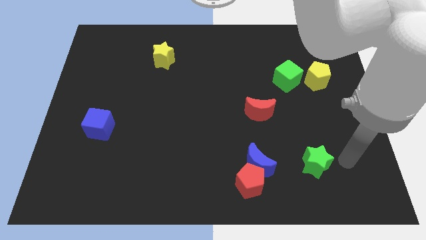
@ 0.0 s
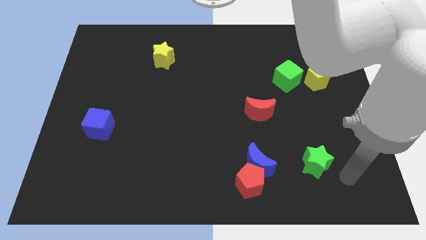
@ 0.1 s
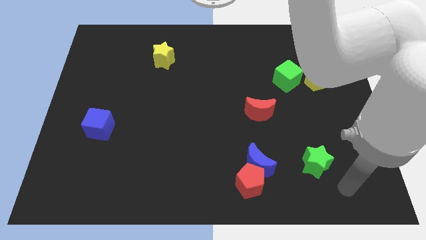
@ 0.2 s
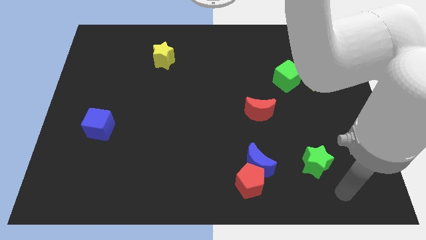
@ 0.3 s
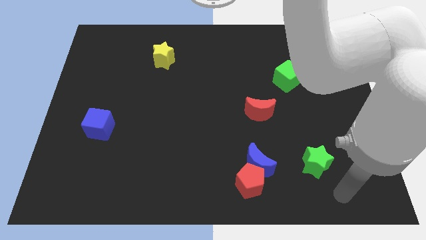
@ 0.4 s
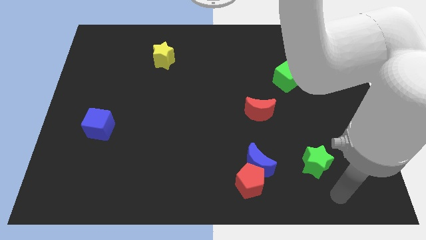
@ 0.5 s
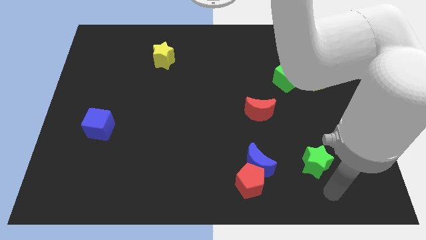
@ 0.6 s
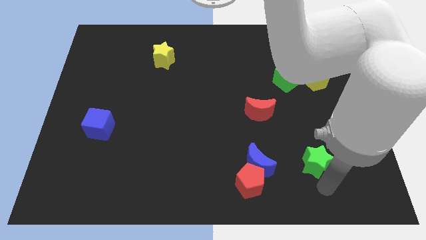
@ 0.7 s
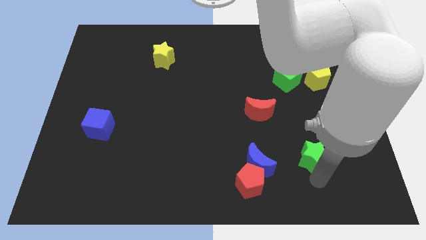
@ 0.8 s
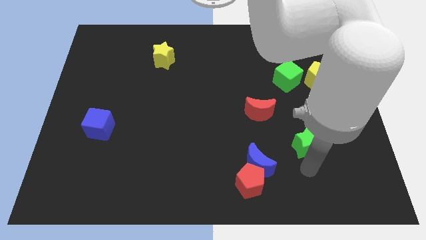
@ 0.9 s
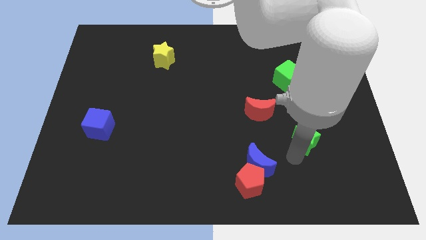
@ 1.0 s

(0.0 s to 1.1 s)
slide green star slightly upward

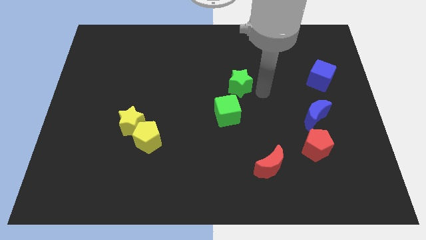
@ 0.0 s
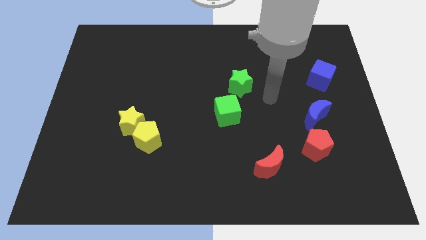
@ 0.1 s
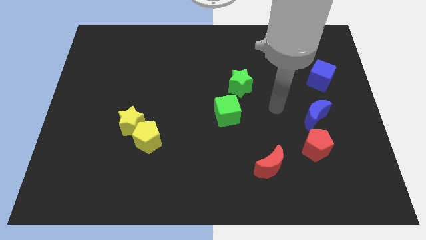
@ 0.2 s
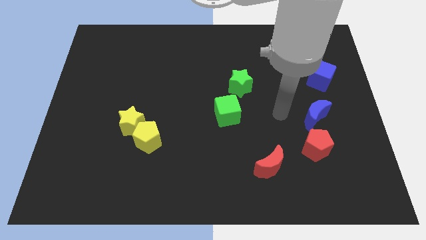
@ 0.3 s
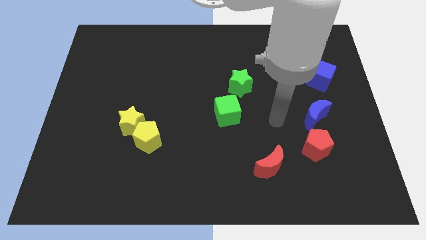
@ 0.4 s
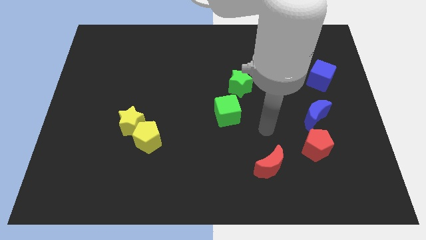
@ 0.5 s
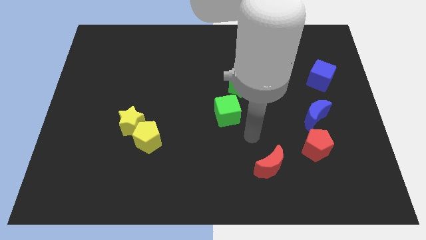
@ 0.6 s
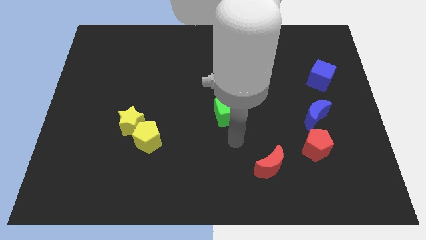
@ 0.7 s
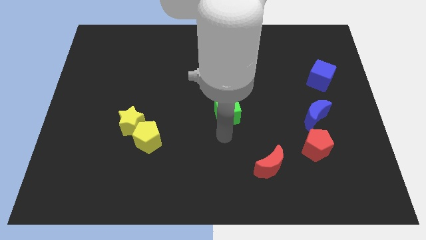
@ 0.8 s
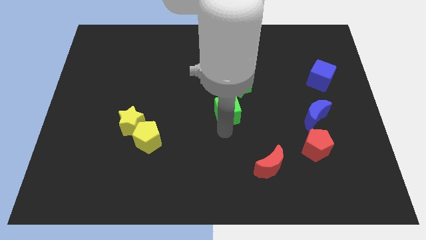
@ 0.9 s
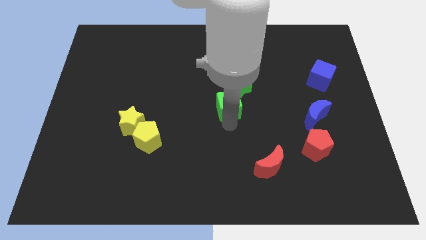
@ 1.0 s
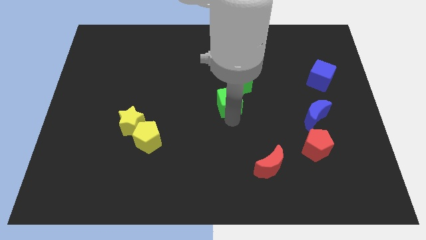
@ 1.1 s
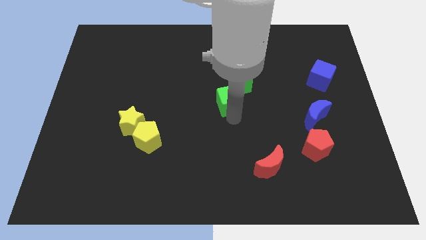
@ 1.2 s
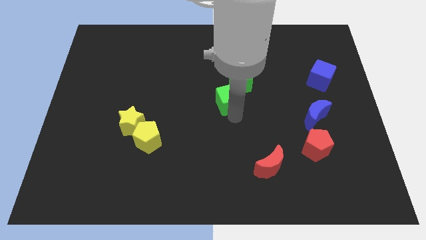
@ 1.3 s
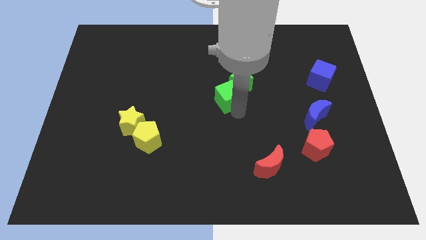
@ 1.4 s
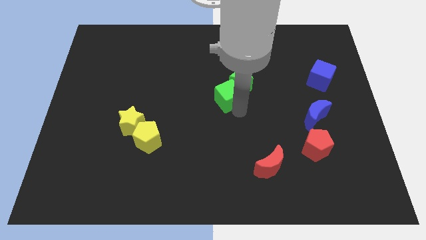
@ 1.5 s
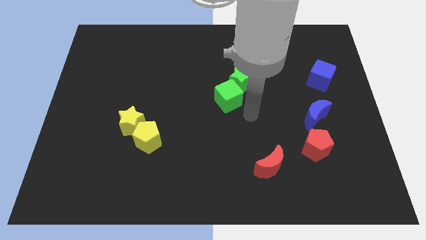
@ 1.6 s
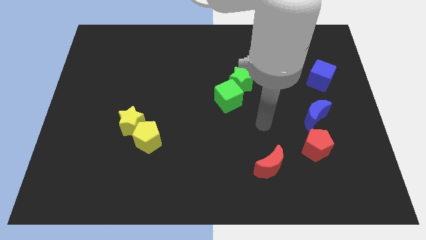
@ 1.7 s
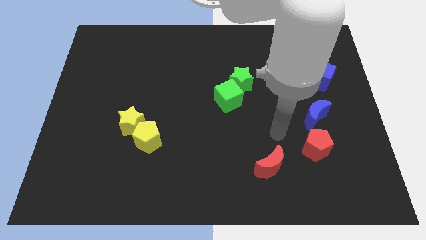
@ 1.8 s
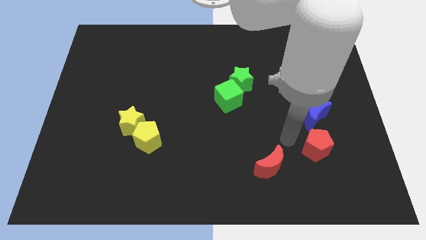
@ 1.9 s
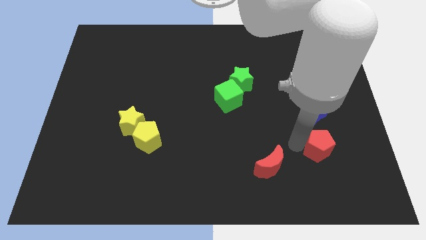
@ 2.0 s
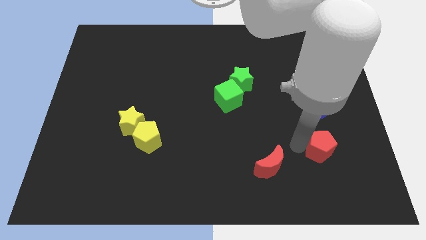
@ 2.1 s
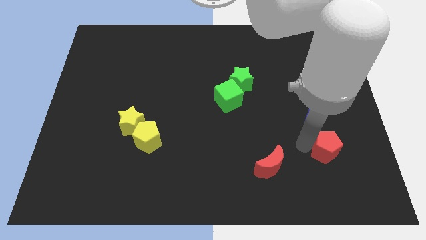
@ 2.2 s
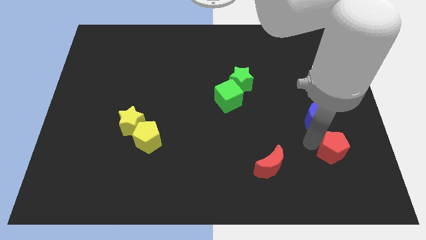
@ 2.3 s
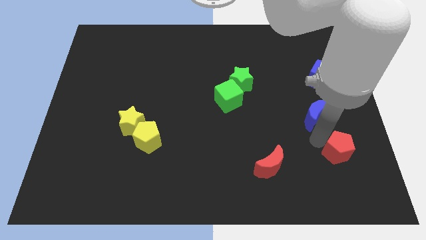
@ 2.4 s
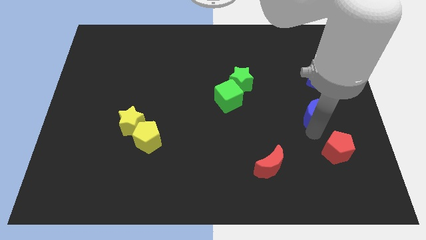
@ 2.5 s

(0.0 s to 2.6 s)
push the red pentagon slightly towards right

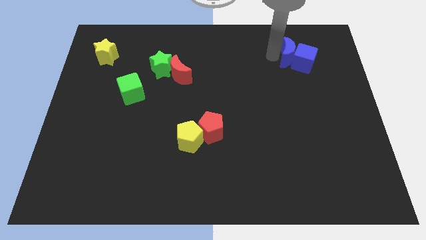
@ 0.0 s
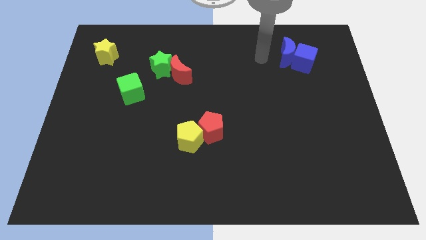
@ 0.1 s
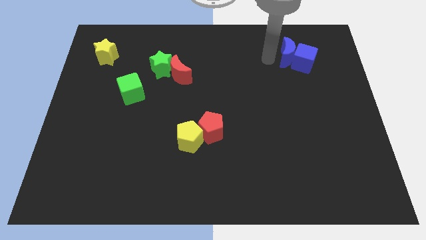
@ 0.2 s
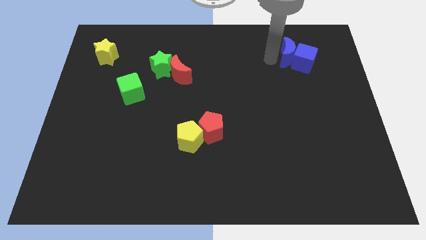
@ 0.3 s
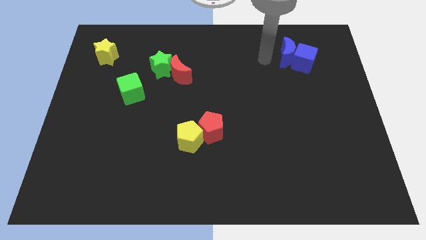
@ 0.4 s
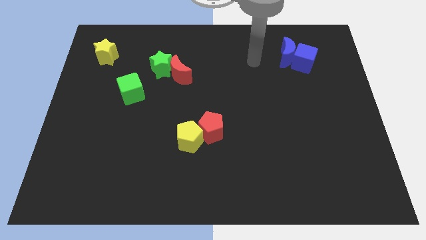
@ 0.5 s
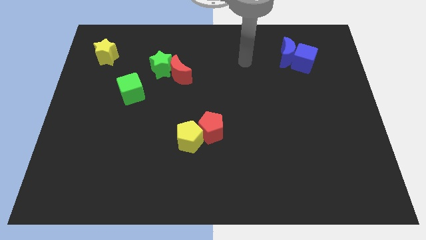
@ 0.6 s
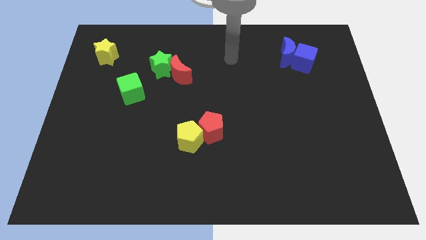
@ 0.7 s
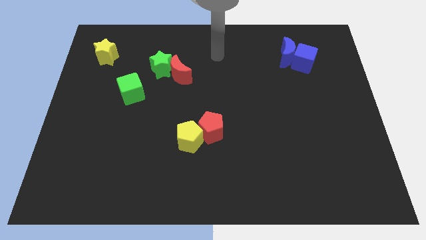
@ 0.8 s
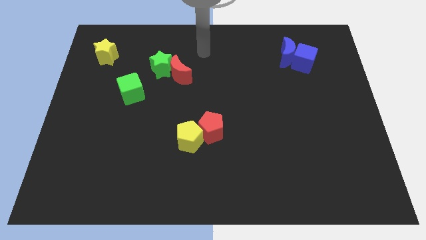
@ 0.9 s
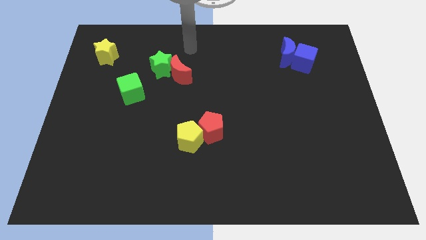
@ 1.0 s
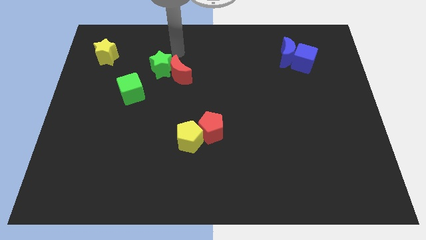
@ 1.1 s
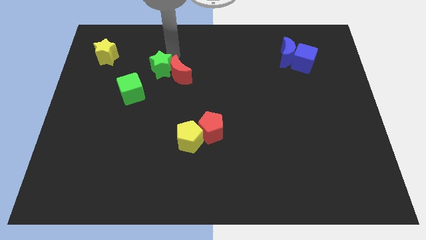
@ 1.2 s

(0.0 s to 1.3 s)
move the arm above the green star

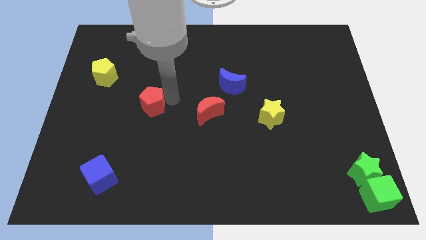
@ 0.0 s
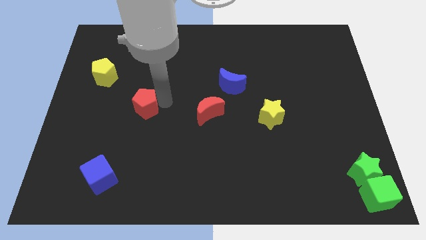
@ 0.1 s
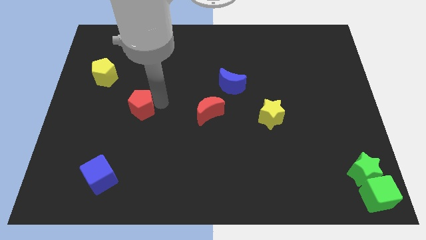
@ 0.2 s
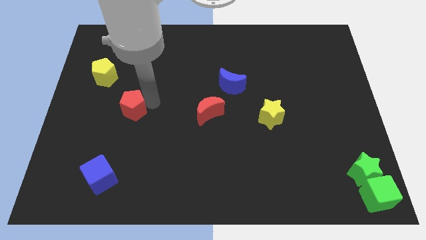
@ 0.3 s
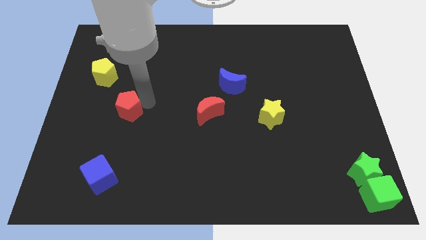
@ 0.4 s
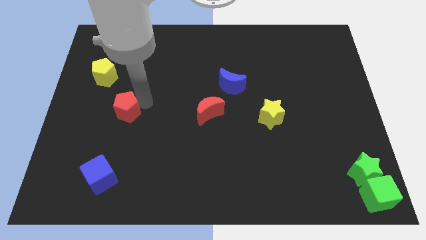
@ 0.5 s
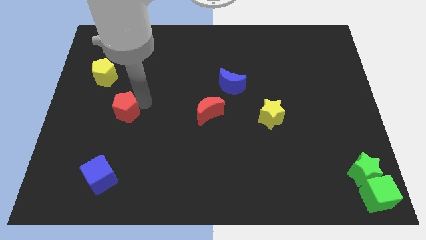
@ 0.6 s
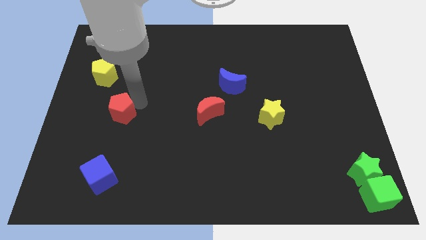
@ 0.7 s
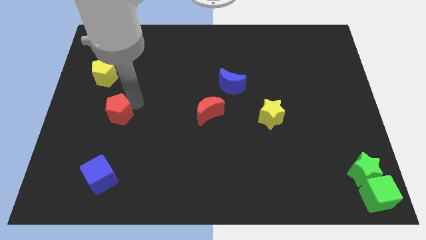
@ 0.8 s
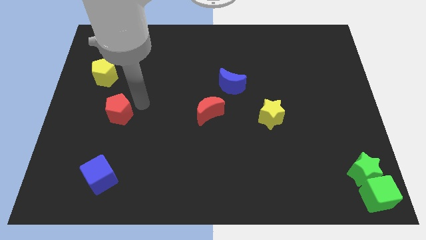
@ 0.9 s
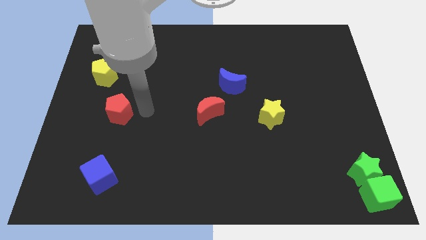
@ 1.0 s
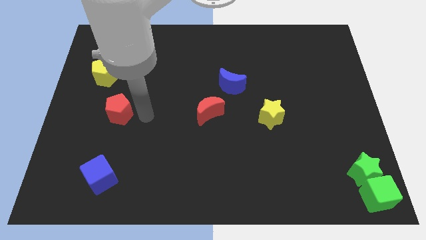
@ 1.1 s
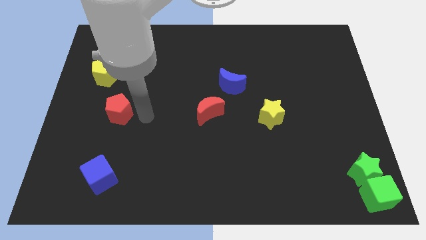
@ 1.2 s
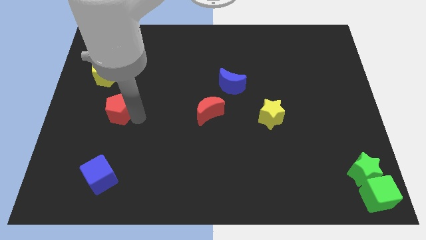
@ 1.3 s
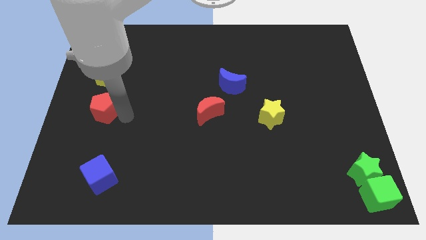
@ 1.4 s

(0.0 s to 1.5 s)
place the red pentagon parallel to the bottom of the yellow pentagon

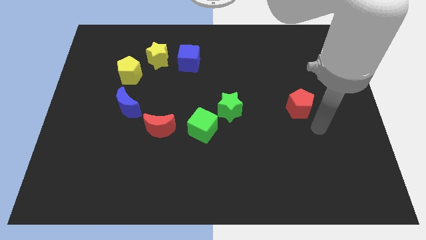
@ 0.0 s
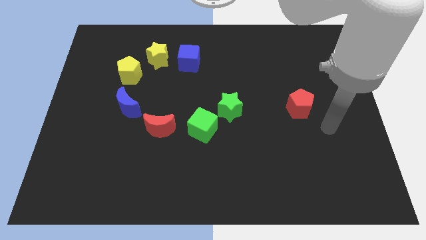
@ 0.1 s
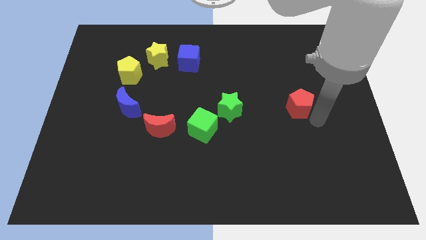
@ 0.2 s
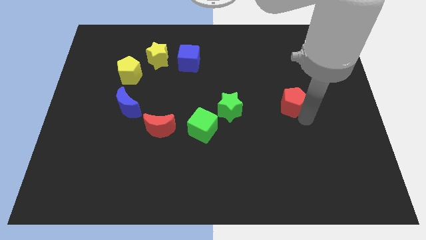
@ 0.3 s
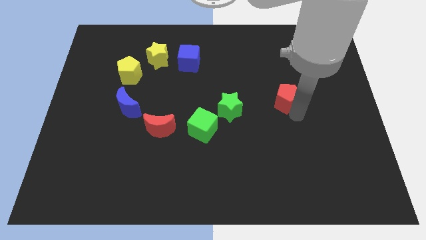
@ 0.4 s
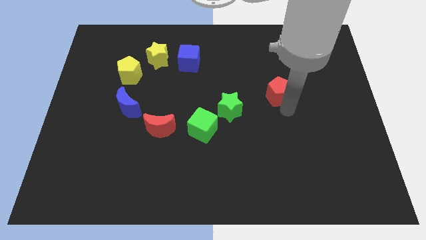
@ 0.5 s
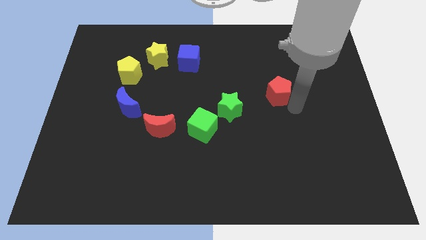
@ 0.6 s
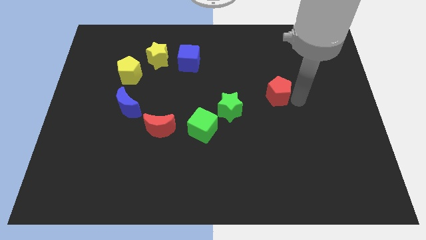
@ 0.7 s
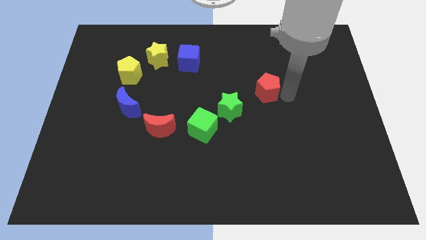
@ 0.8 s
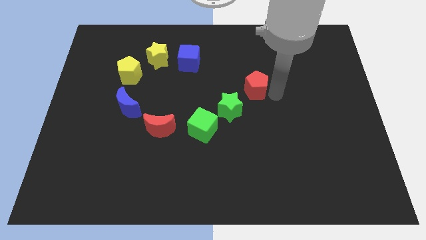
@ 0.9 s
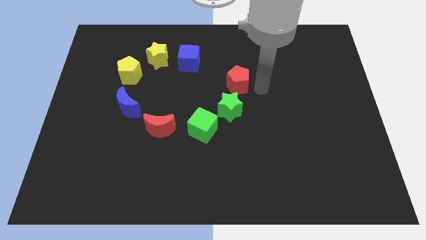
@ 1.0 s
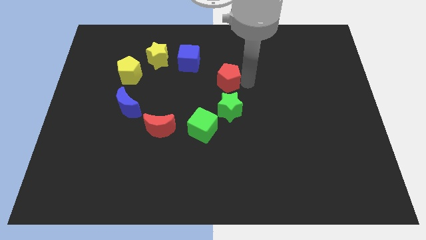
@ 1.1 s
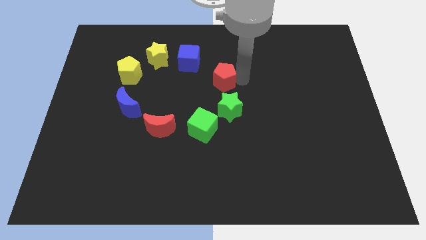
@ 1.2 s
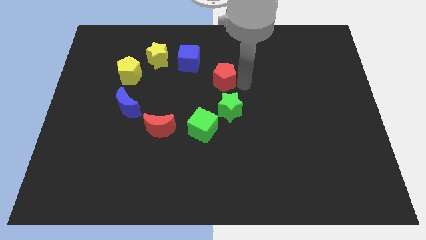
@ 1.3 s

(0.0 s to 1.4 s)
place the red pentagon vertically above the green star

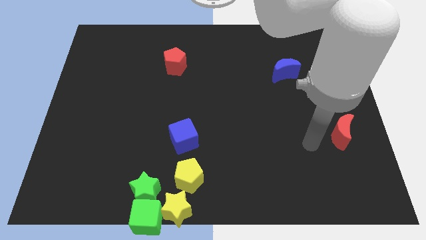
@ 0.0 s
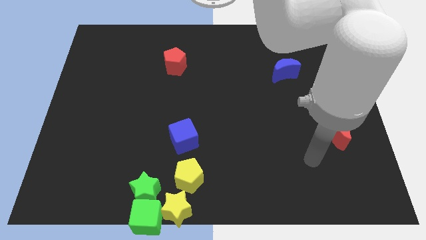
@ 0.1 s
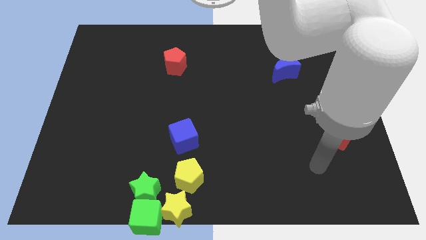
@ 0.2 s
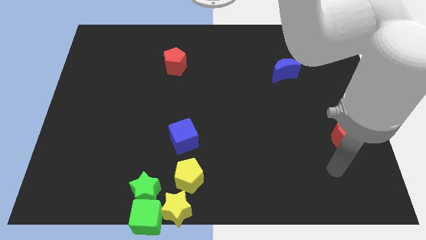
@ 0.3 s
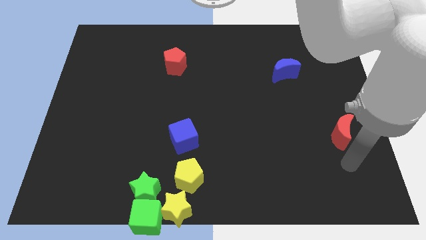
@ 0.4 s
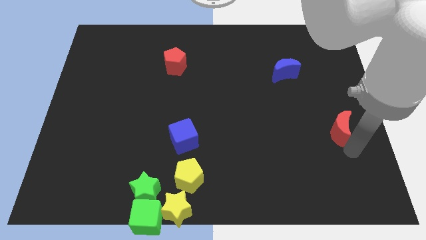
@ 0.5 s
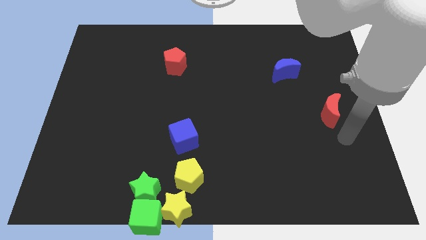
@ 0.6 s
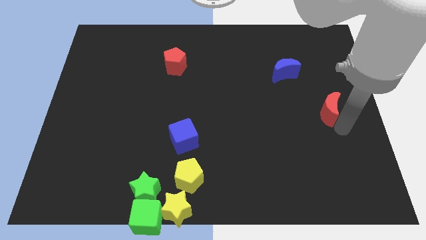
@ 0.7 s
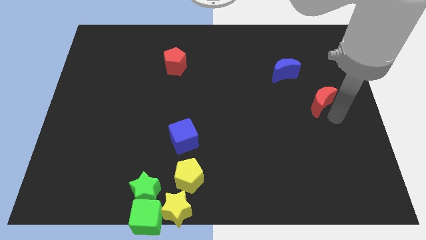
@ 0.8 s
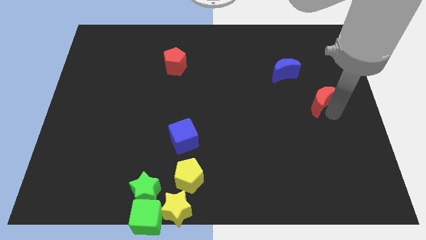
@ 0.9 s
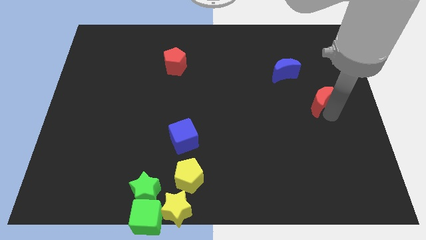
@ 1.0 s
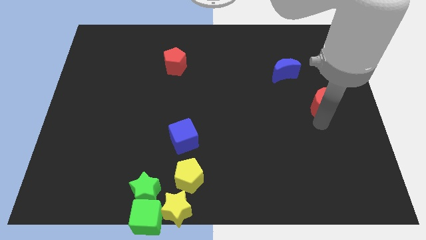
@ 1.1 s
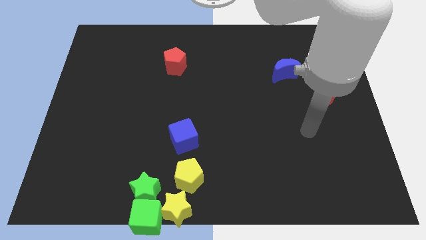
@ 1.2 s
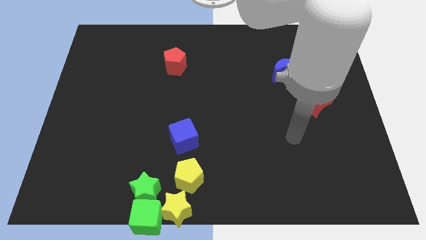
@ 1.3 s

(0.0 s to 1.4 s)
place the red crescent diagonally bottom right to the blue crescent
